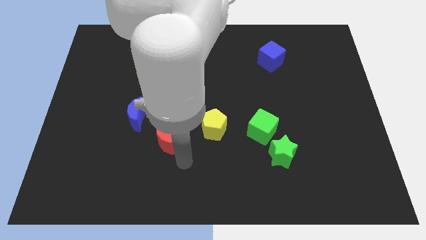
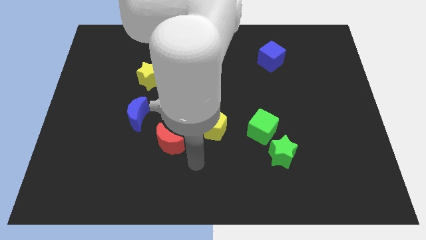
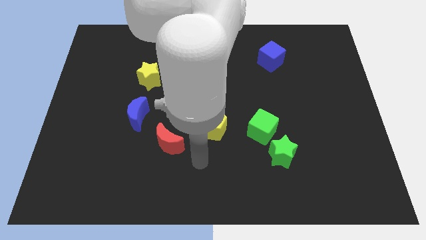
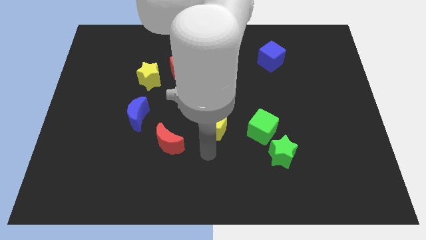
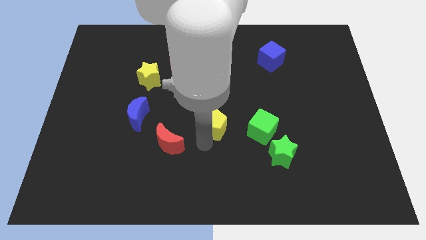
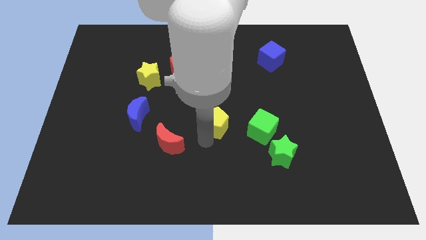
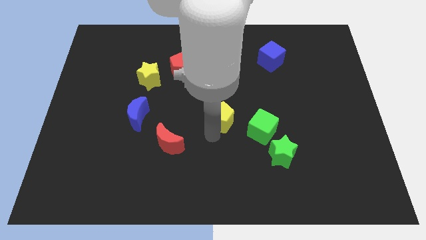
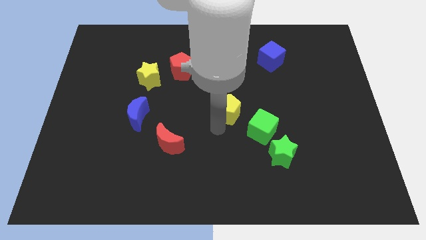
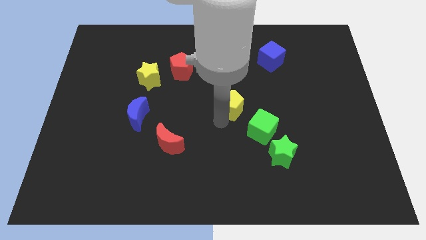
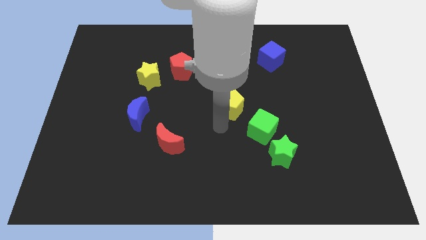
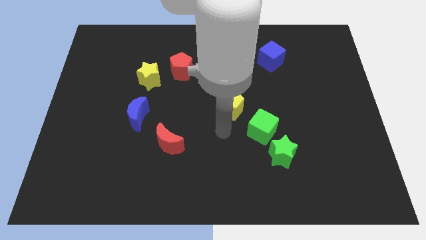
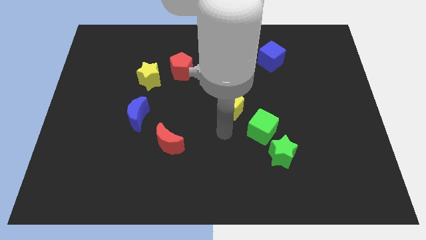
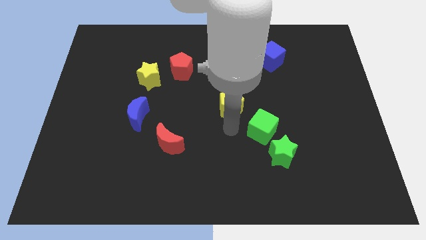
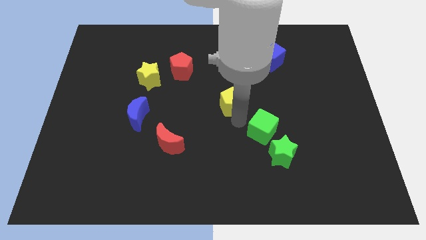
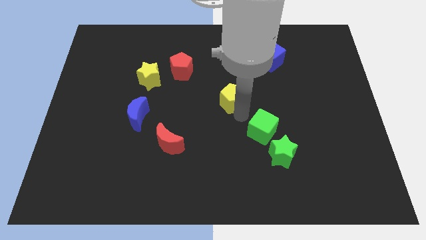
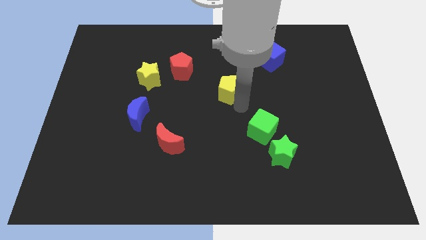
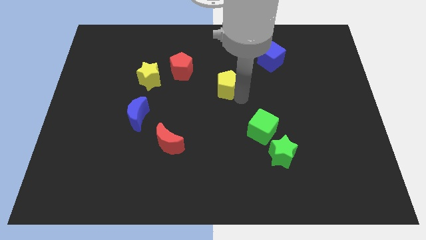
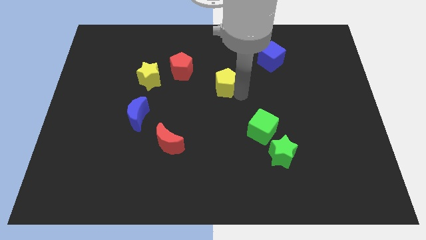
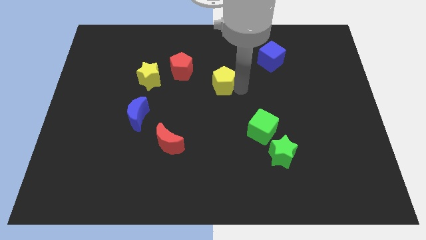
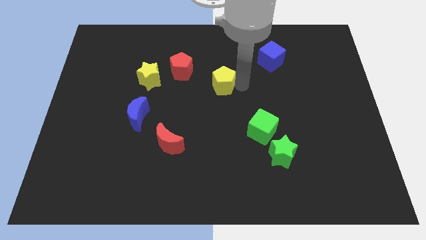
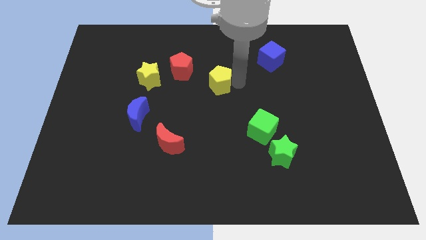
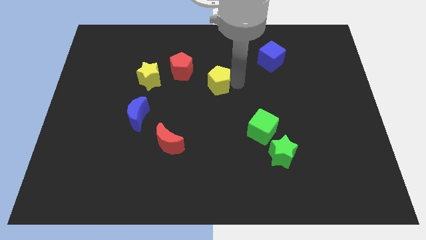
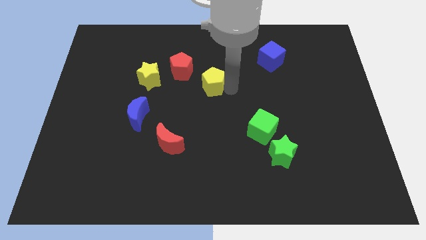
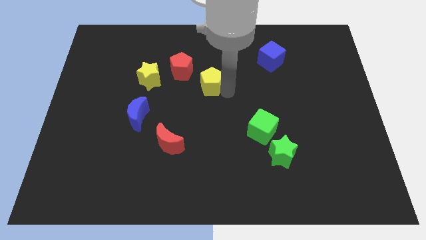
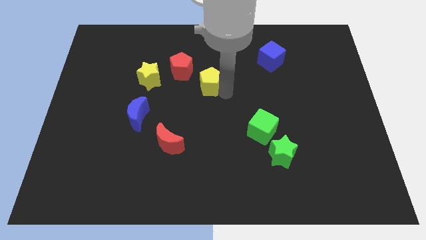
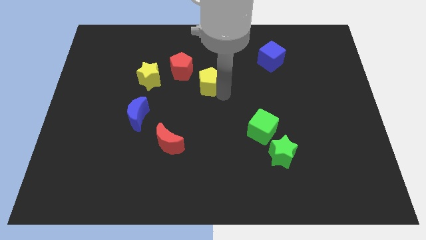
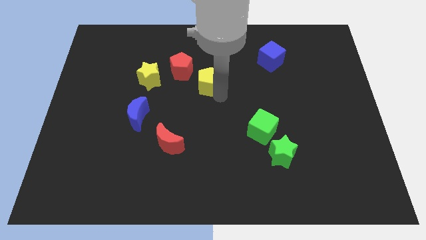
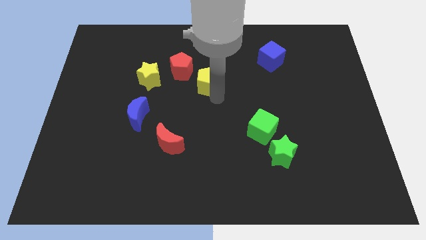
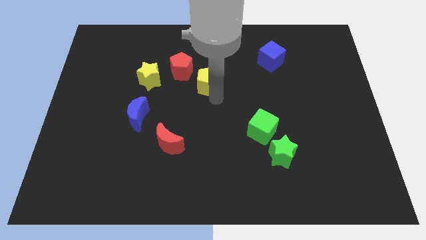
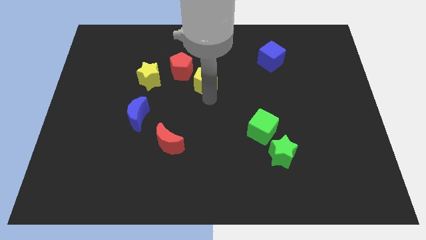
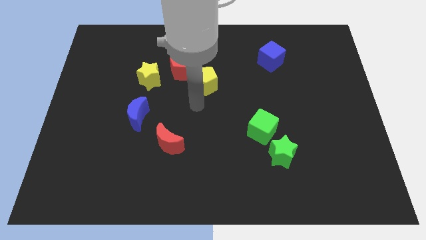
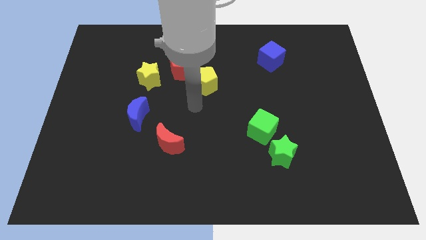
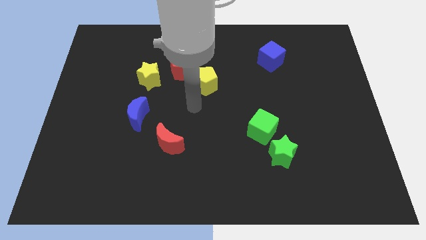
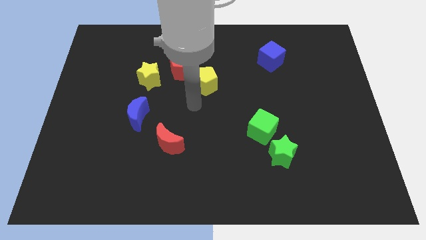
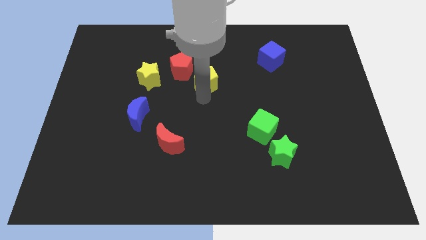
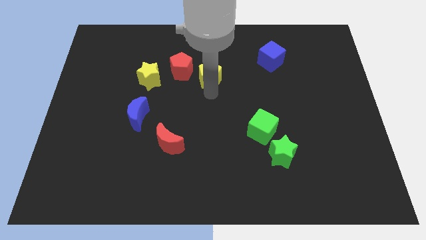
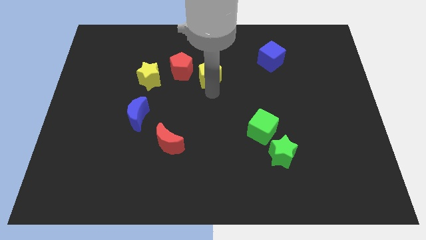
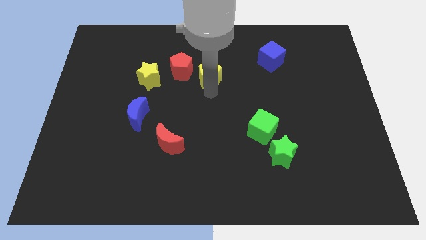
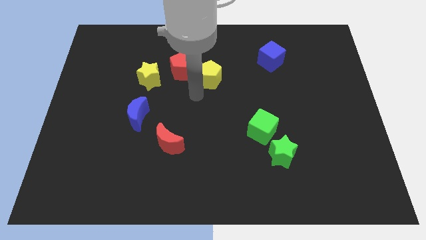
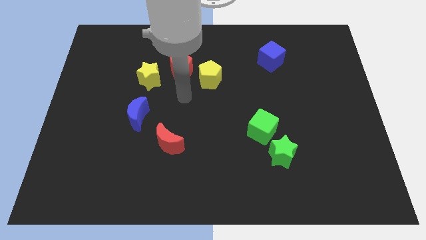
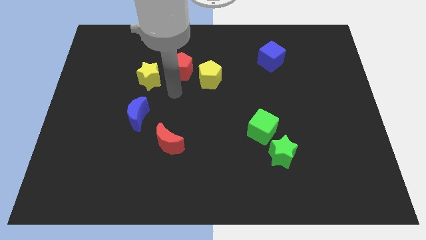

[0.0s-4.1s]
place the yellow pentagon parallel right to red pentagon

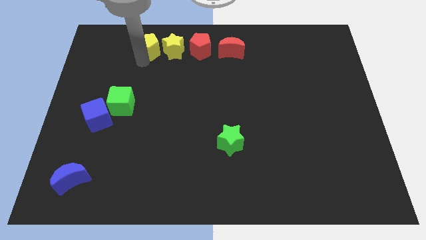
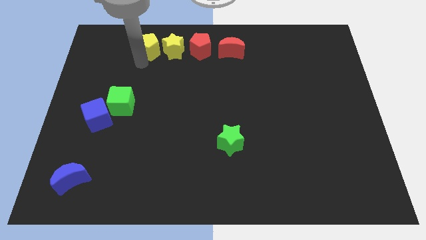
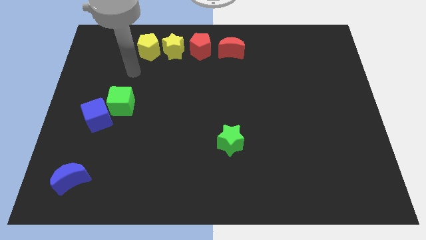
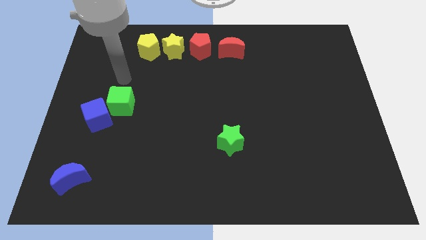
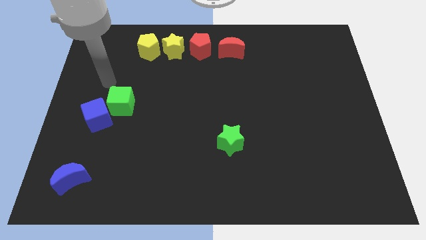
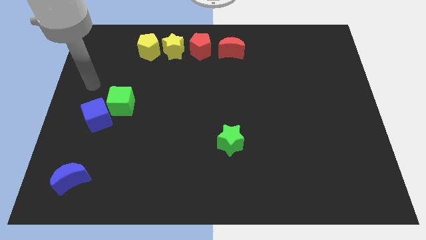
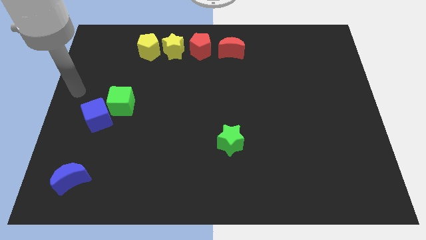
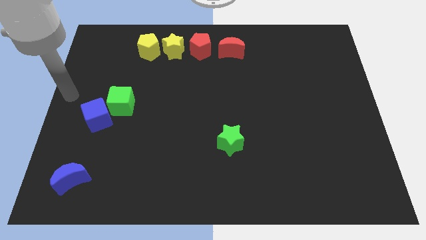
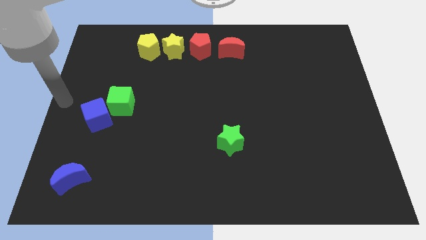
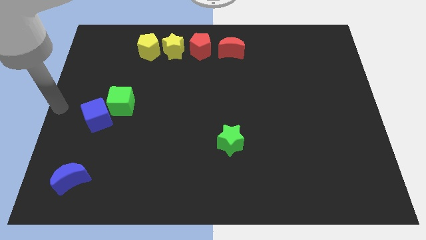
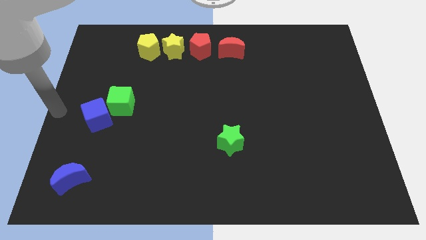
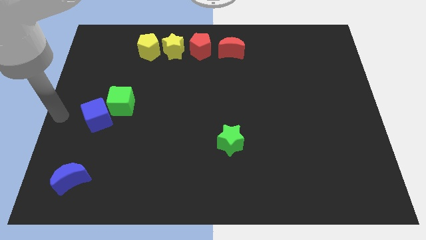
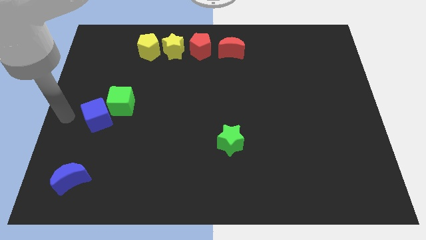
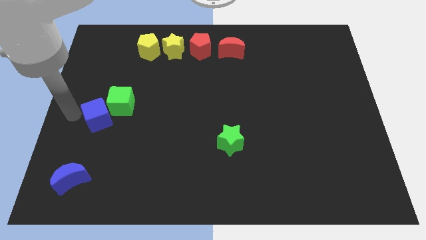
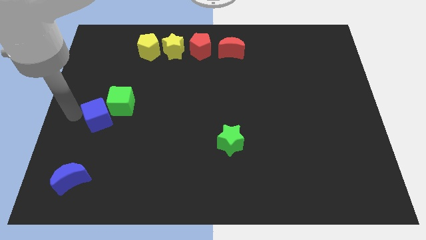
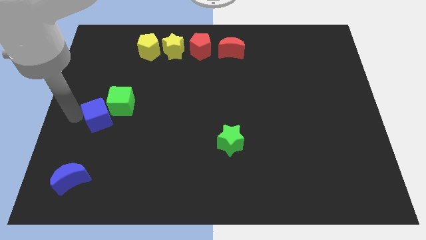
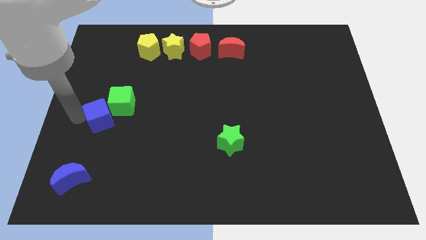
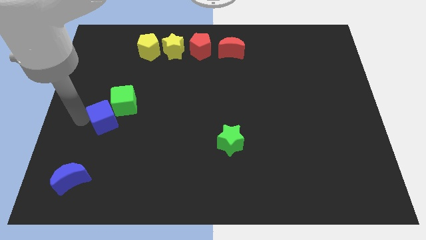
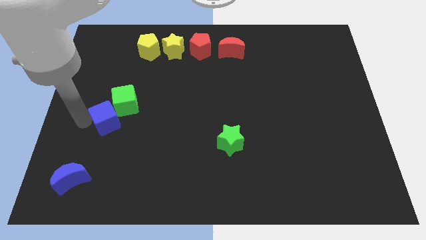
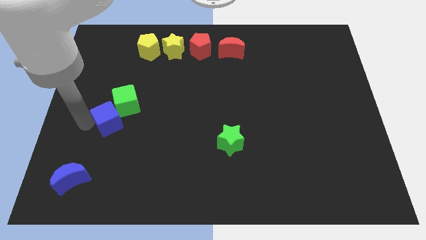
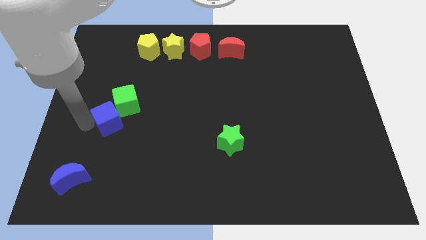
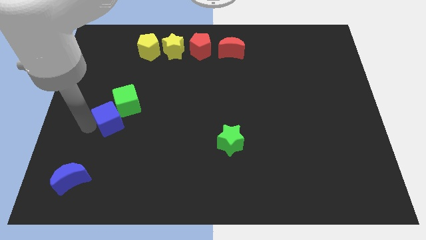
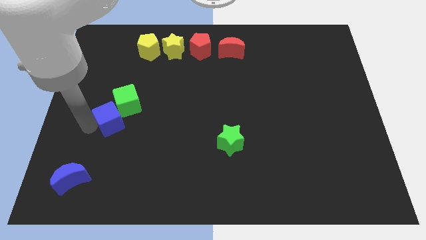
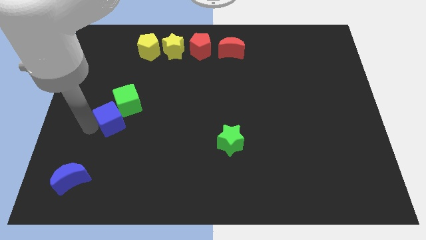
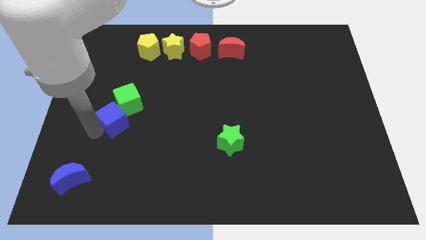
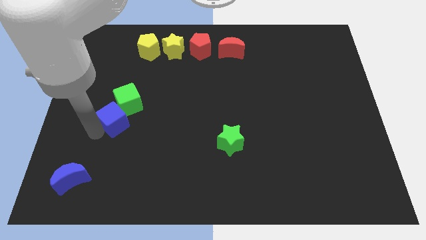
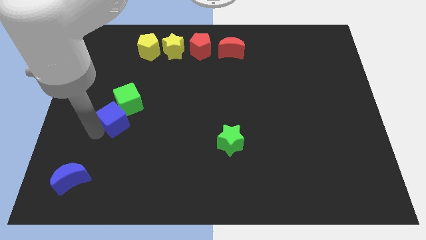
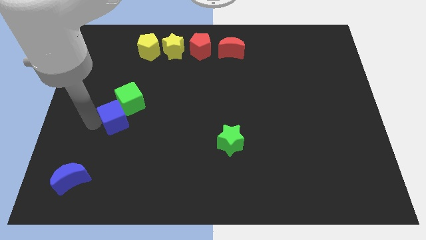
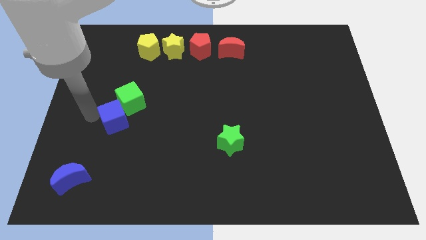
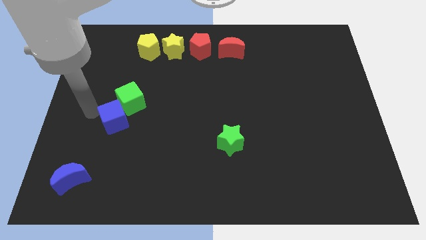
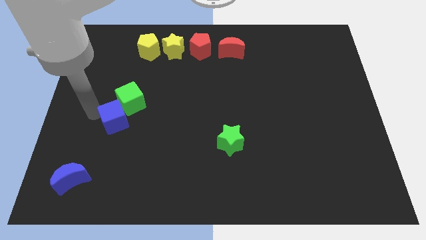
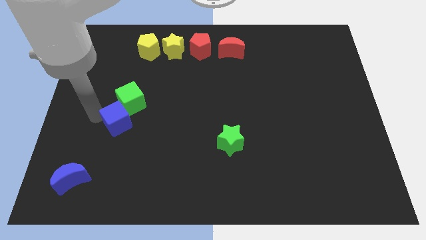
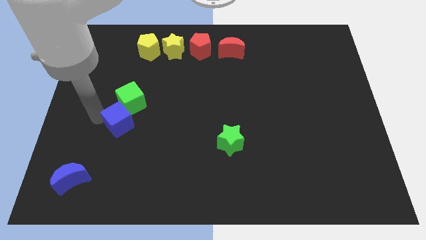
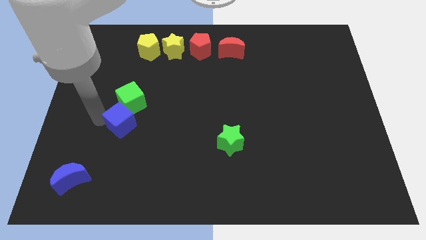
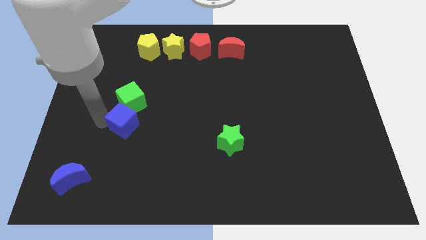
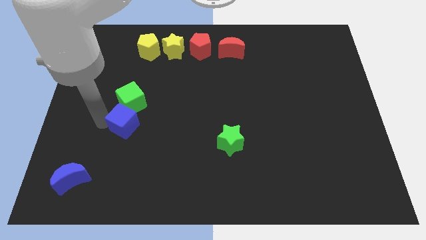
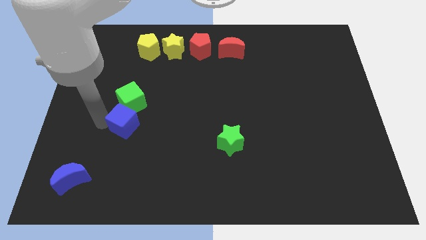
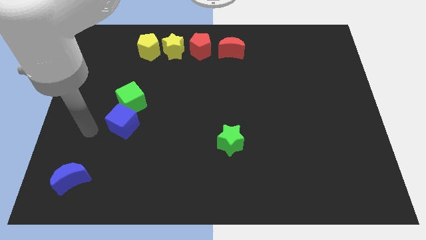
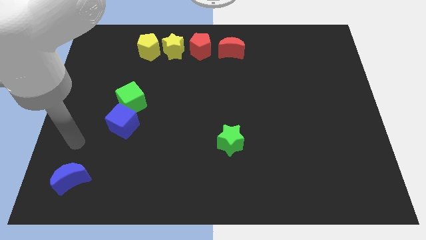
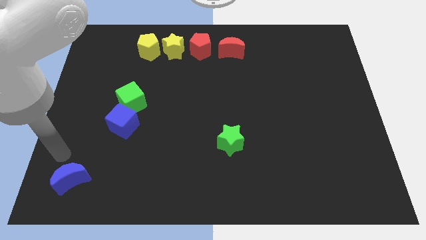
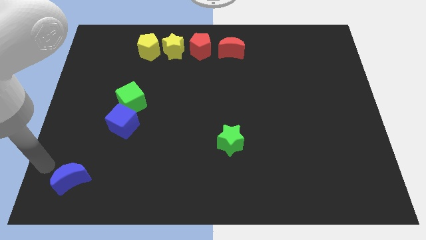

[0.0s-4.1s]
push the blue cube slightly to the right

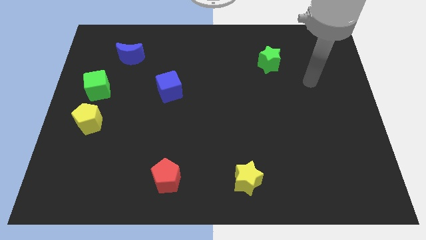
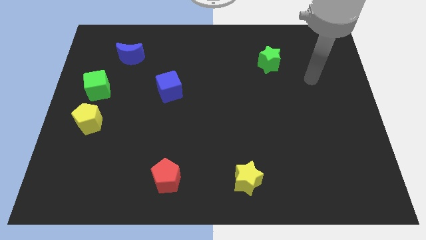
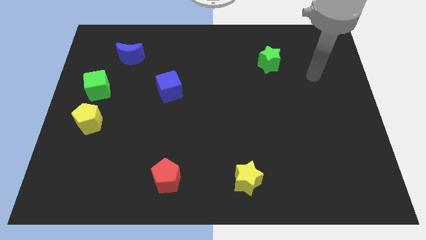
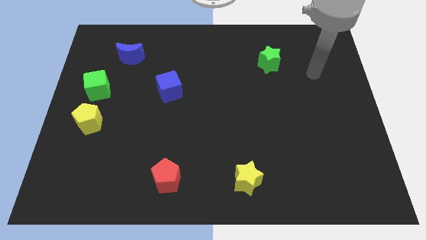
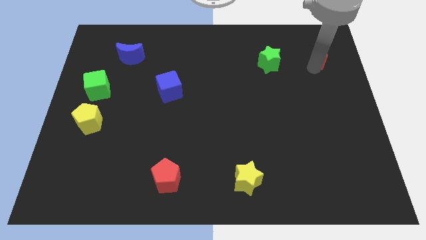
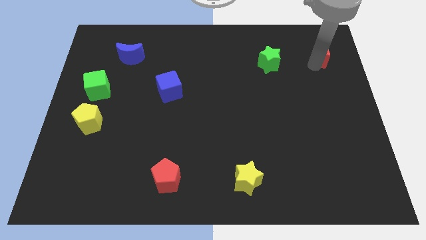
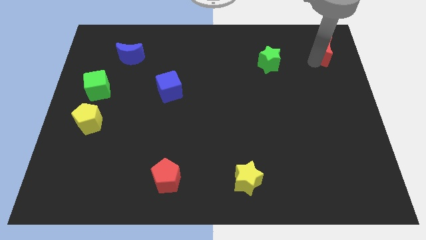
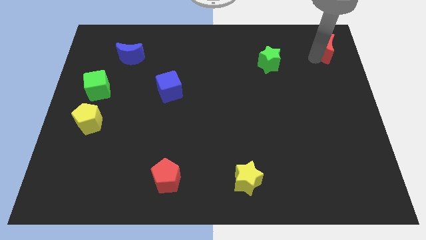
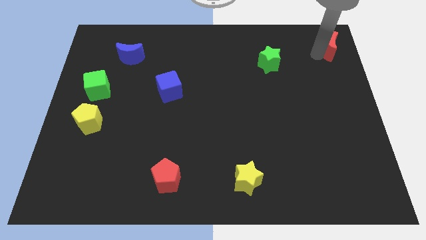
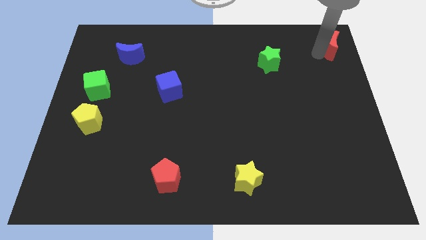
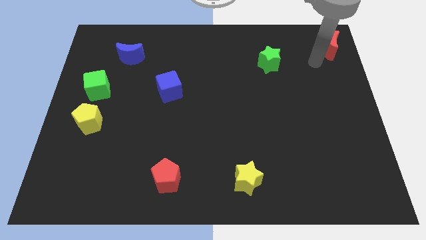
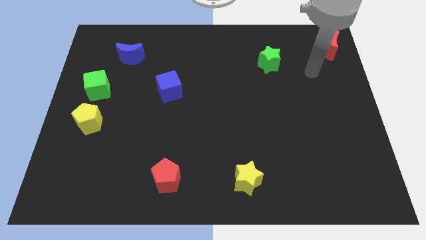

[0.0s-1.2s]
push red moon to the top right corner of the board
